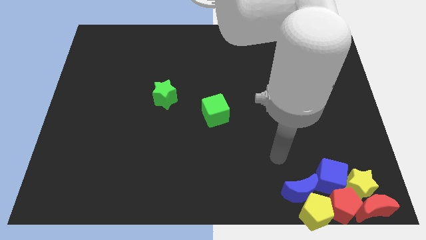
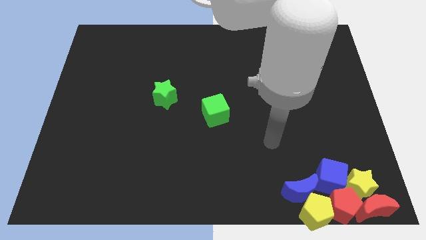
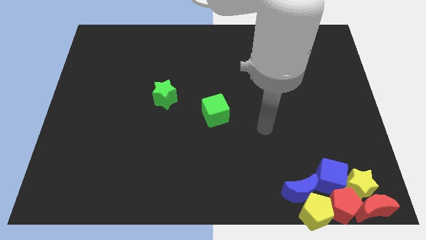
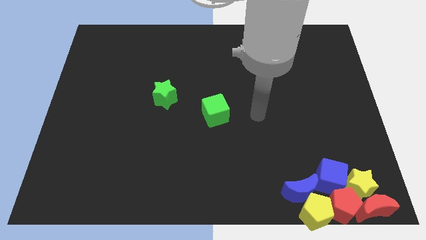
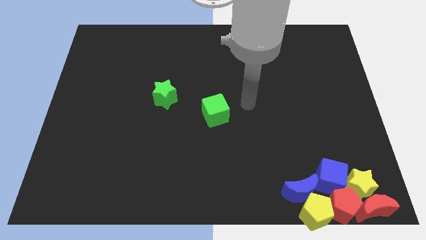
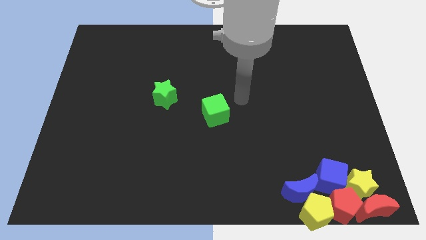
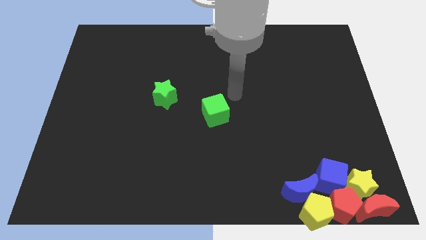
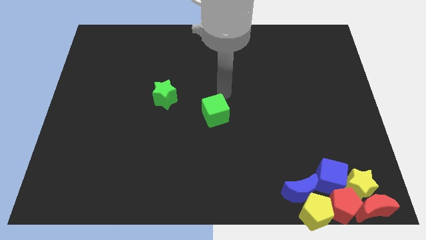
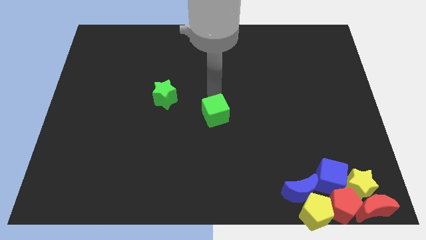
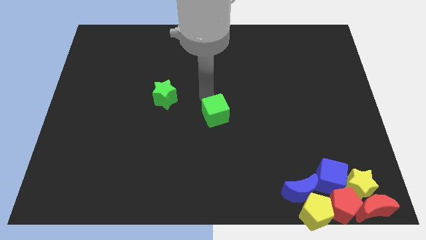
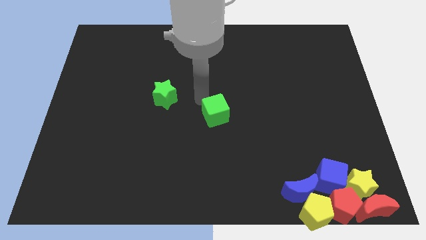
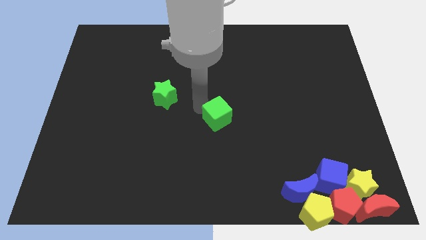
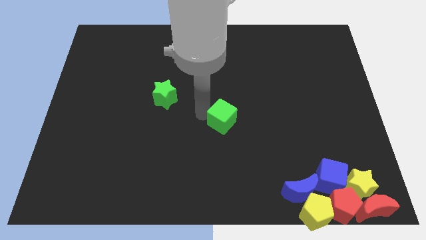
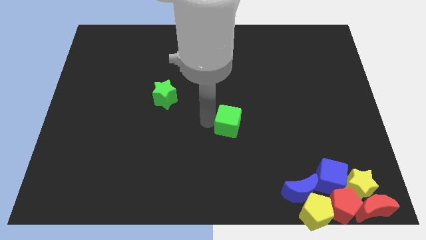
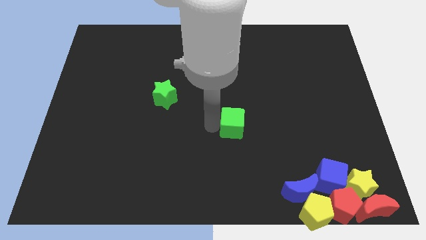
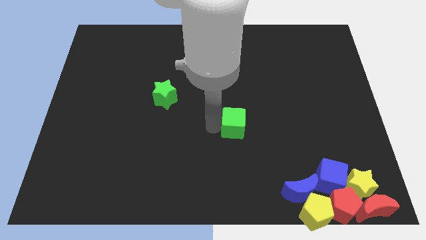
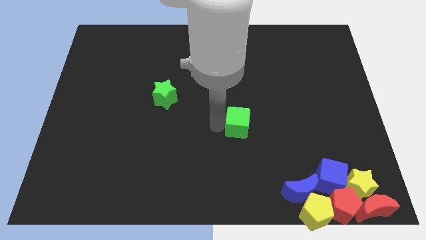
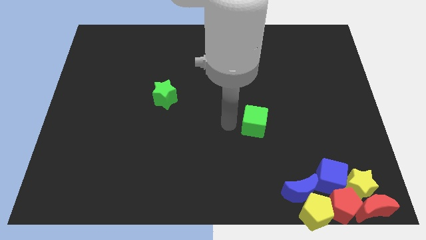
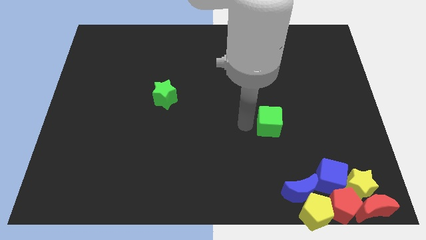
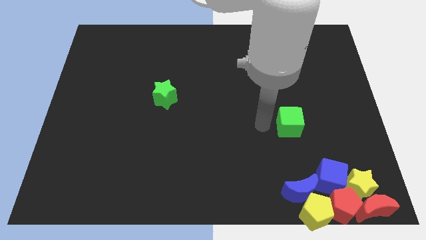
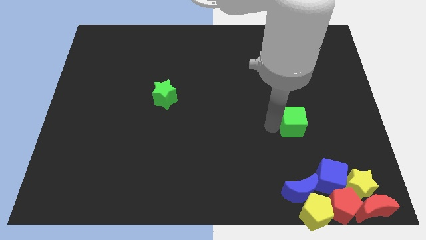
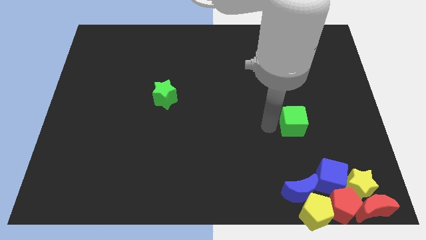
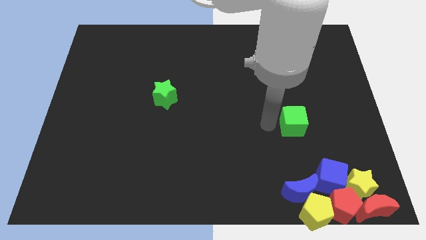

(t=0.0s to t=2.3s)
put the green cube vertically above the blue moon

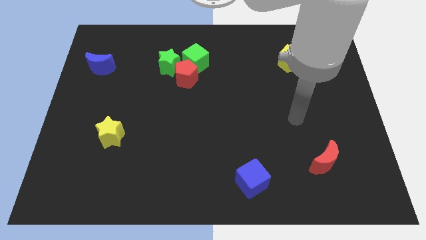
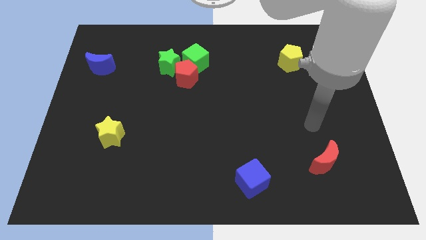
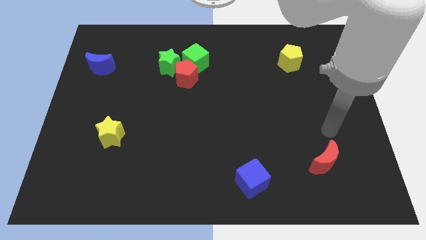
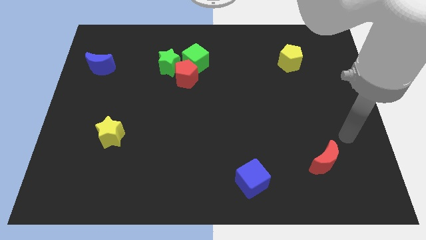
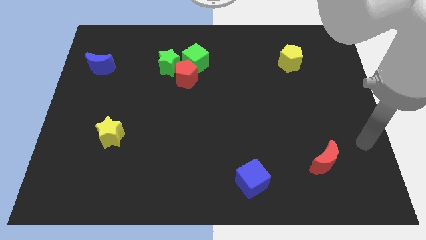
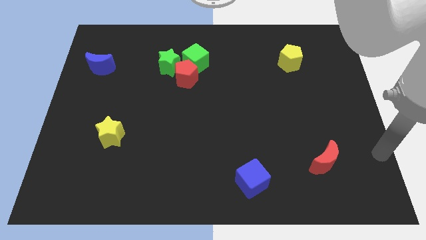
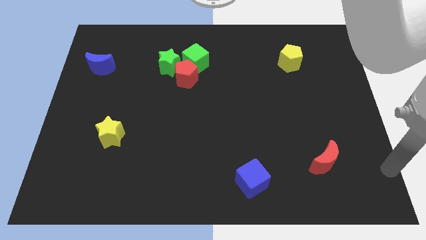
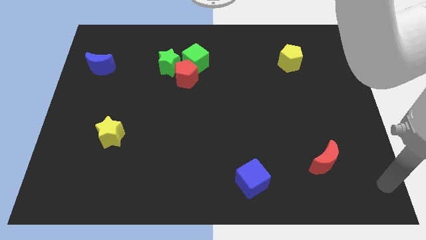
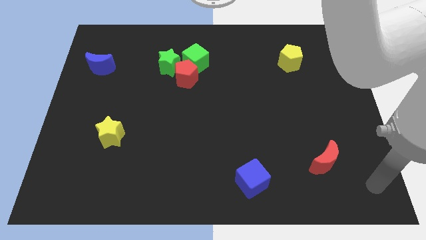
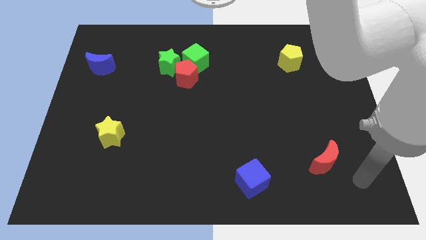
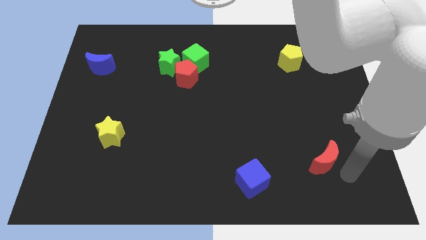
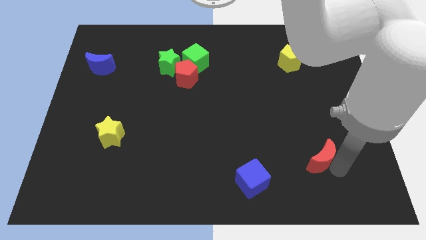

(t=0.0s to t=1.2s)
touch the bottom of red moon

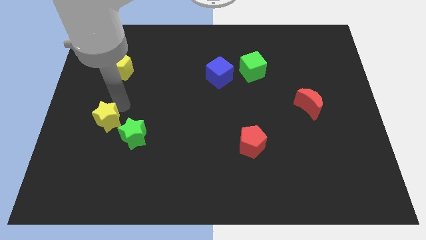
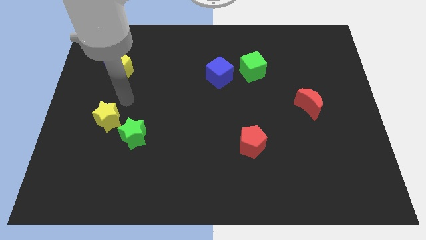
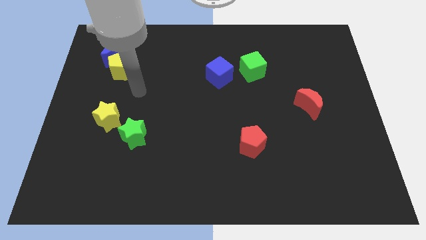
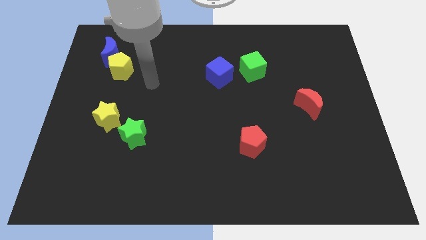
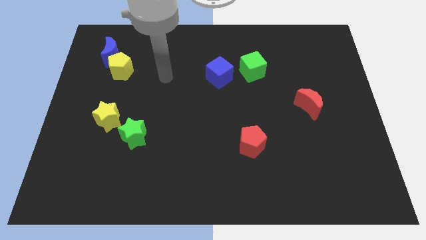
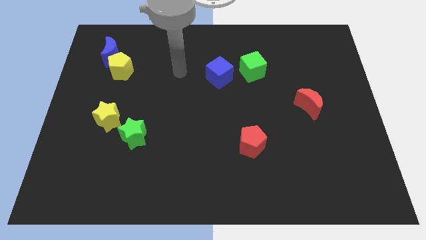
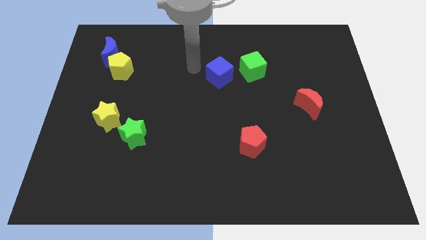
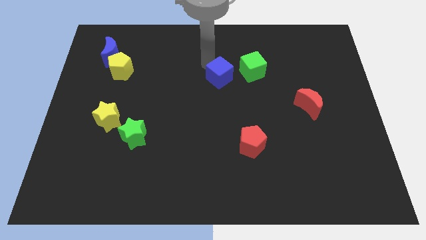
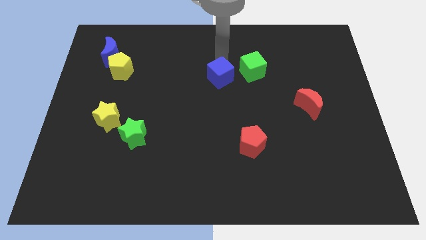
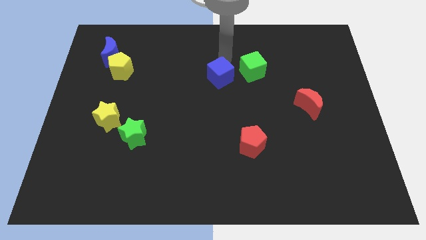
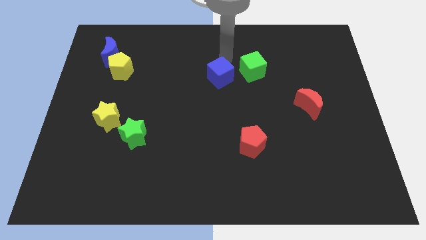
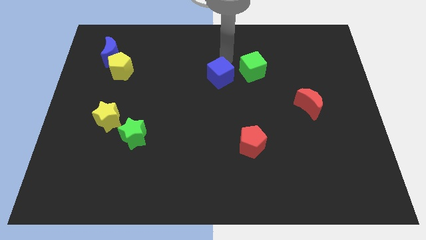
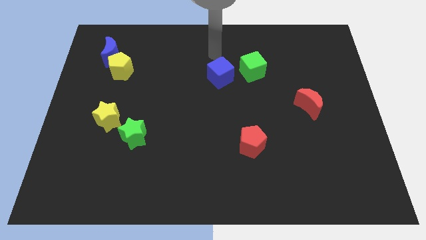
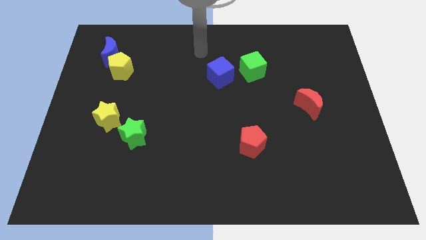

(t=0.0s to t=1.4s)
point your arm at the top of the blue cube

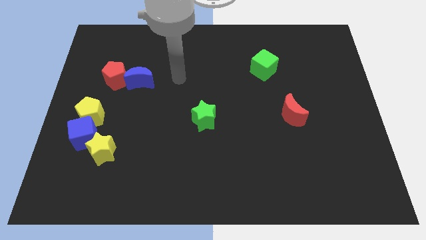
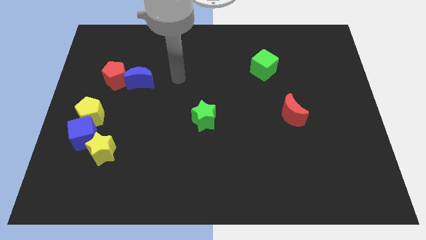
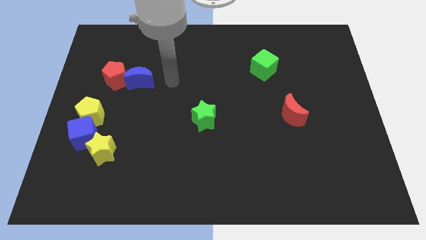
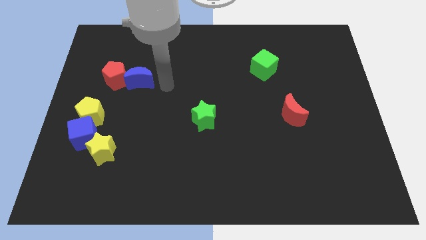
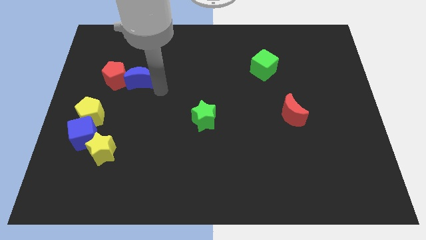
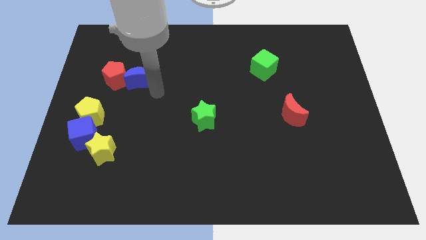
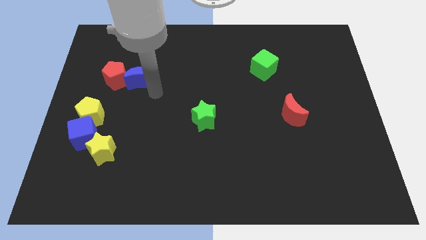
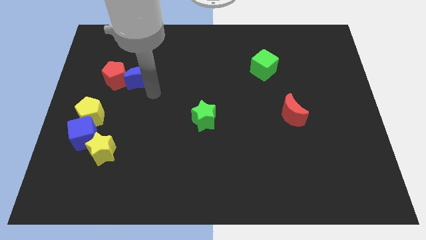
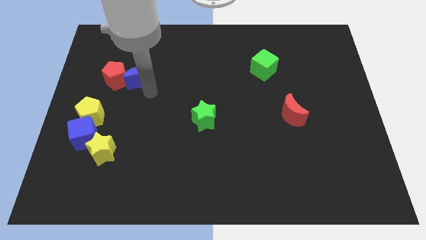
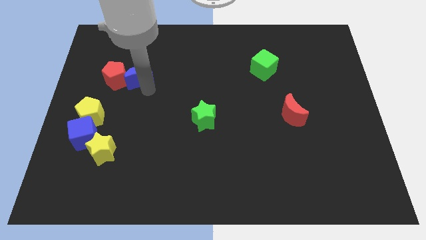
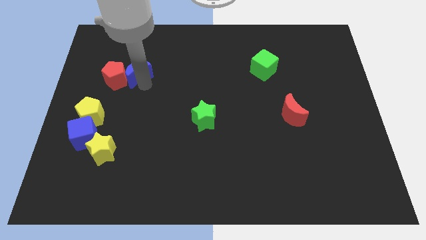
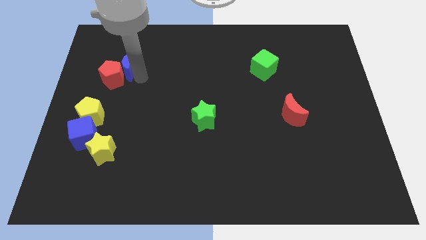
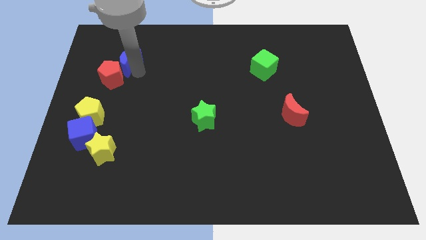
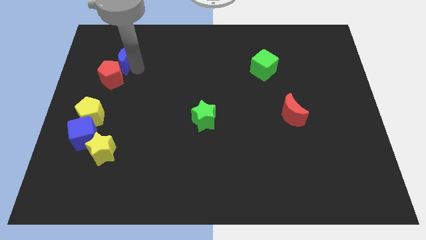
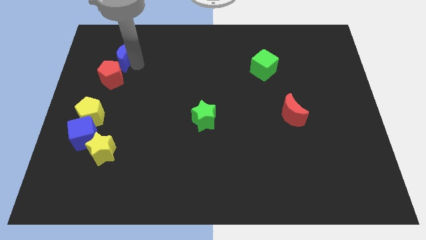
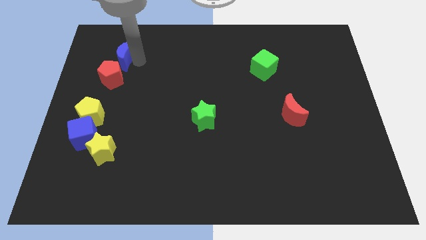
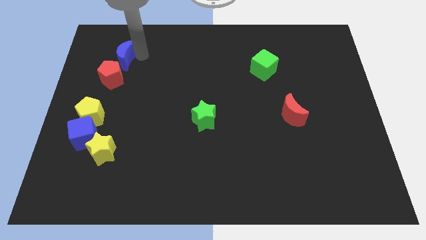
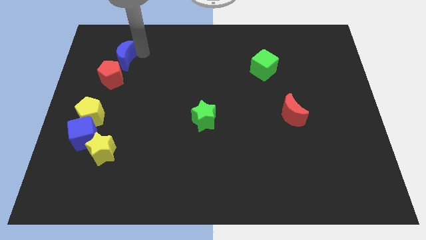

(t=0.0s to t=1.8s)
place the blue moon diagonally top right to the red pentagon

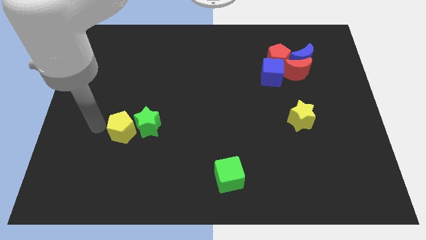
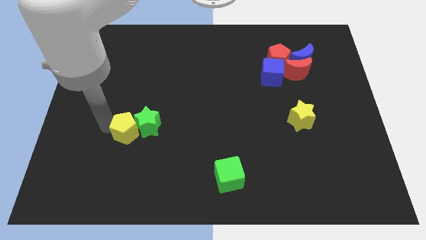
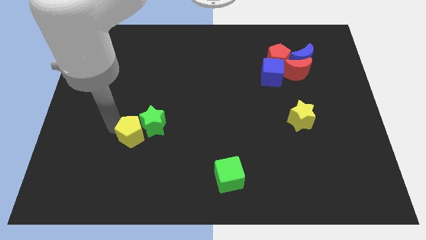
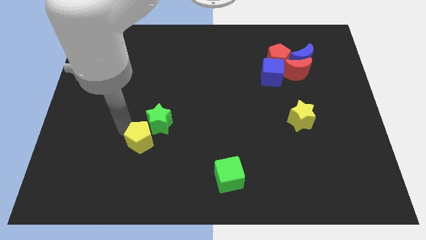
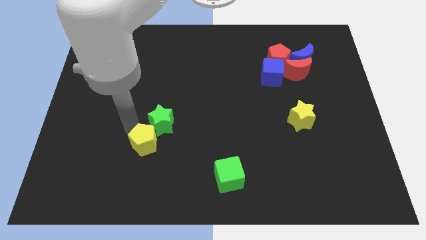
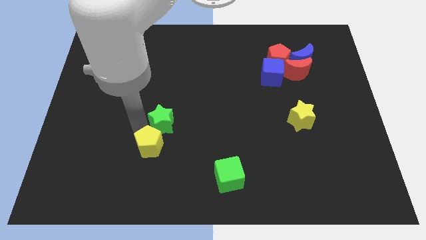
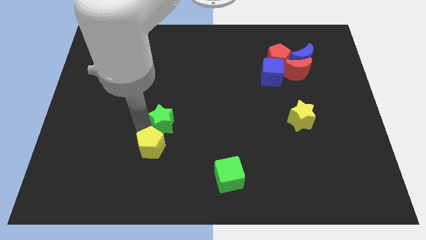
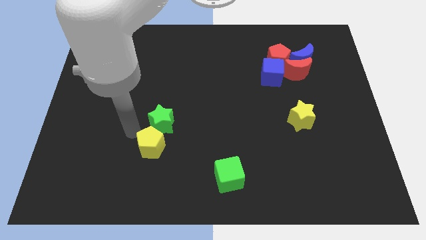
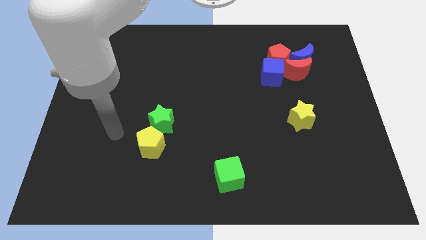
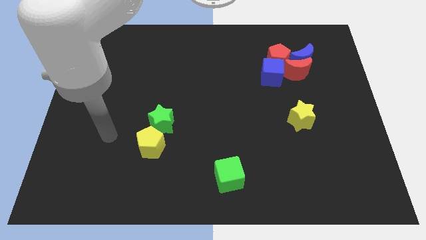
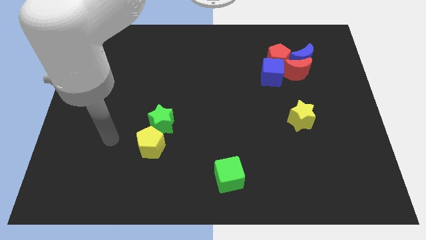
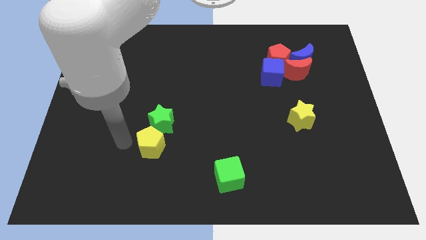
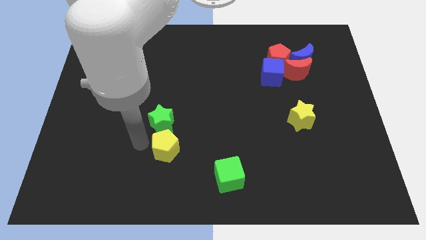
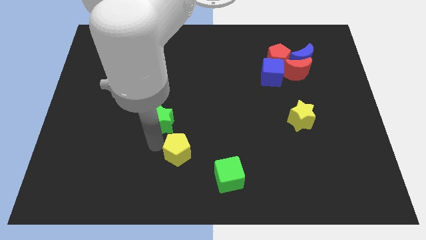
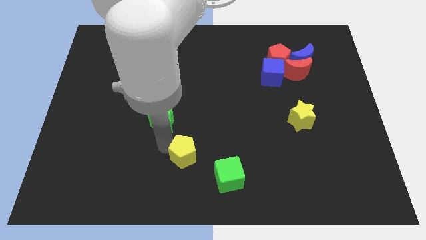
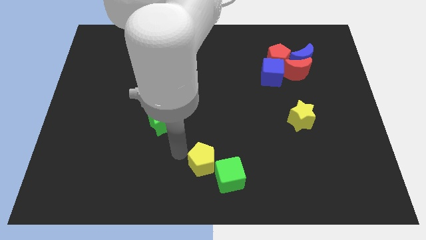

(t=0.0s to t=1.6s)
separate the yellow pentagon and green star

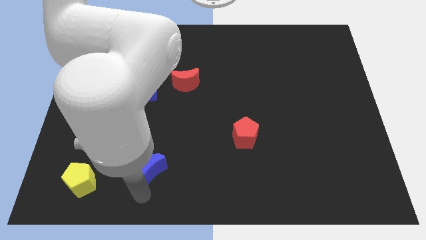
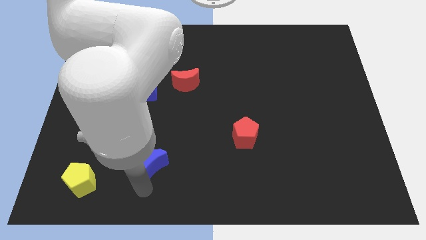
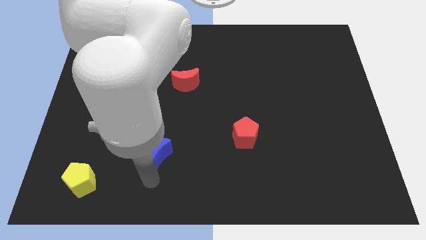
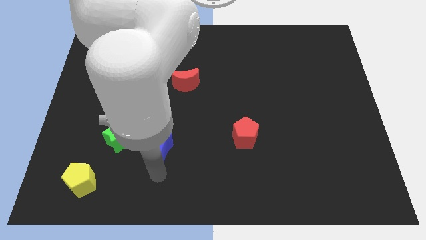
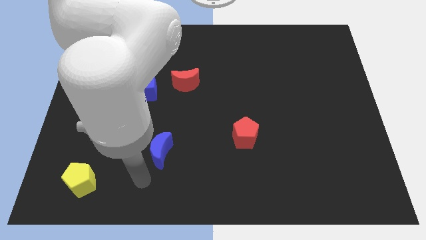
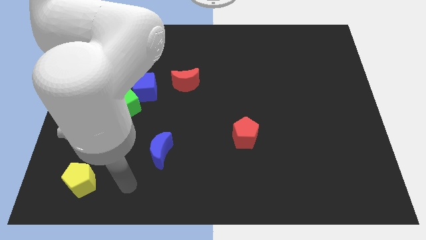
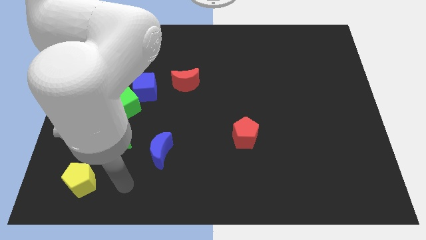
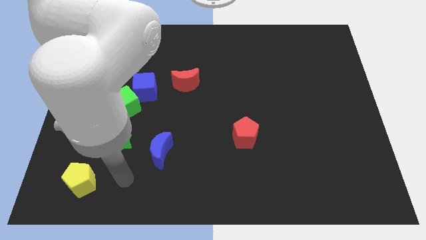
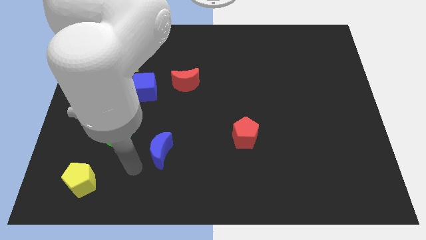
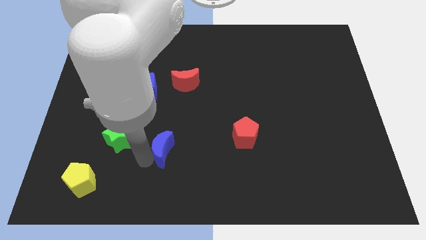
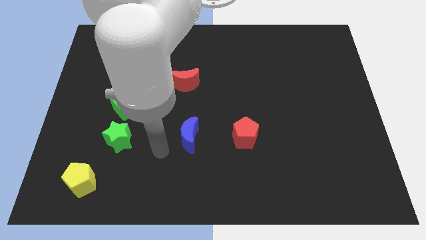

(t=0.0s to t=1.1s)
place the blue moon in between the red pentagon and the green star
